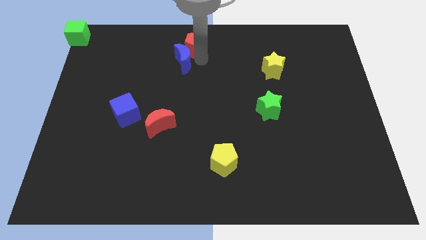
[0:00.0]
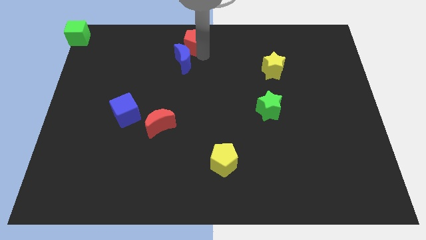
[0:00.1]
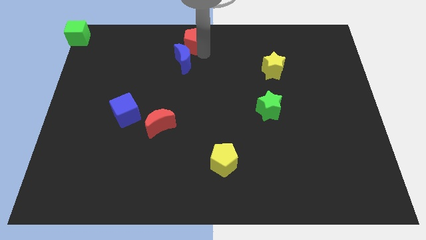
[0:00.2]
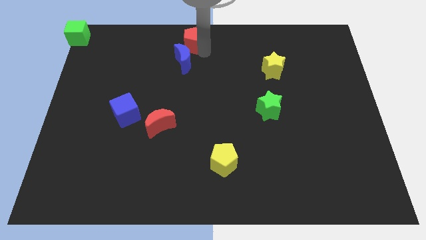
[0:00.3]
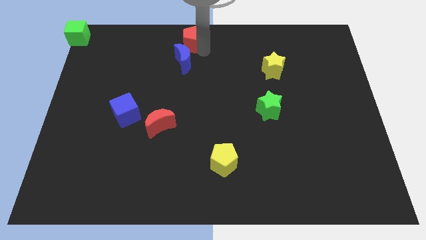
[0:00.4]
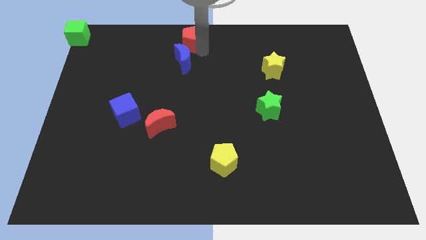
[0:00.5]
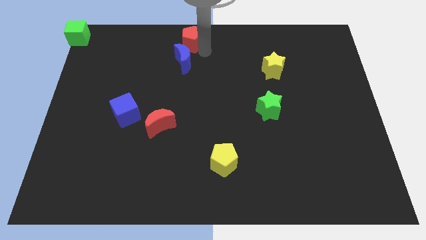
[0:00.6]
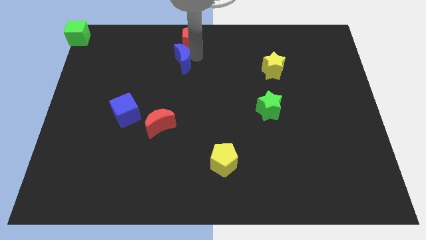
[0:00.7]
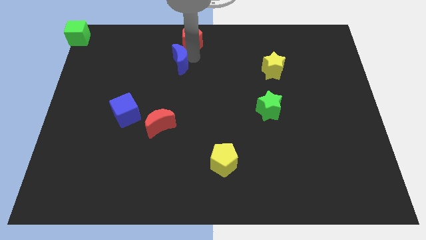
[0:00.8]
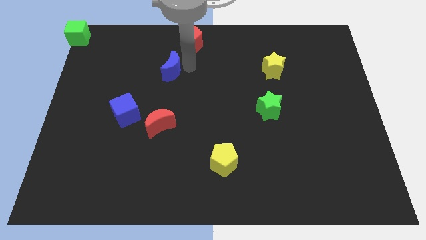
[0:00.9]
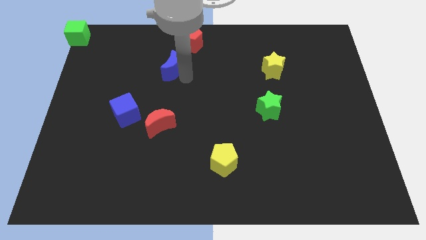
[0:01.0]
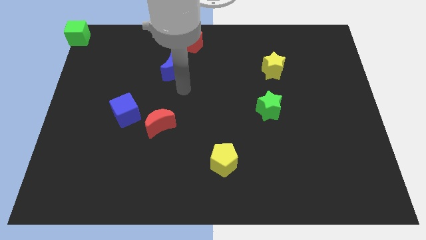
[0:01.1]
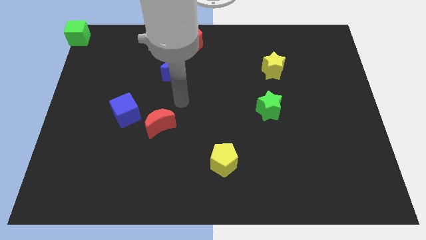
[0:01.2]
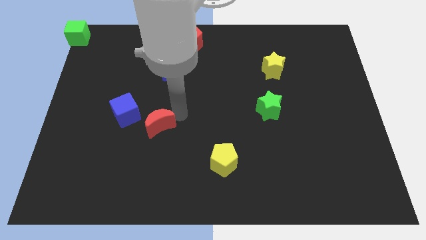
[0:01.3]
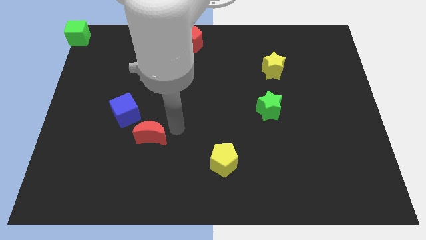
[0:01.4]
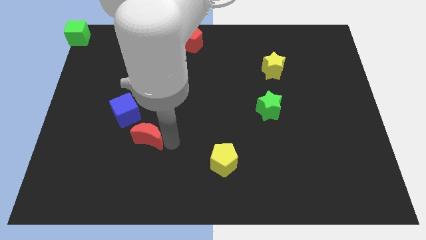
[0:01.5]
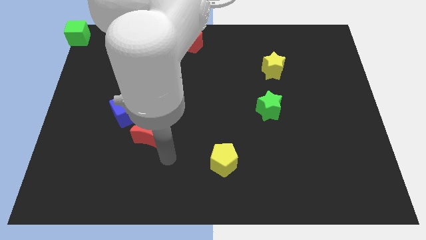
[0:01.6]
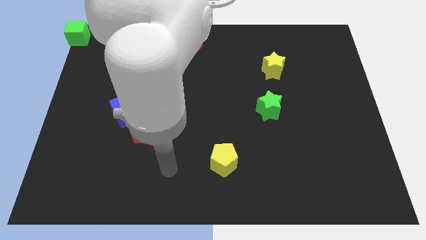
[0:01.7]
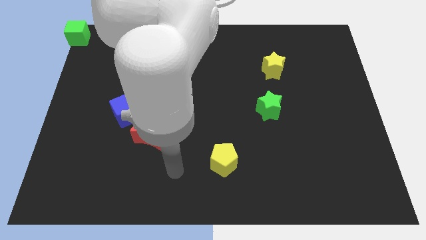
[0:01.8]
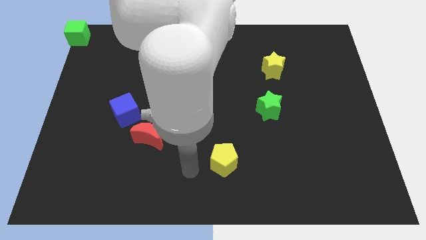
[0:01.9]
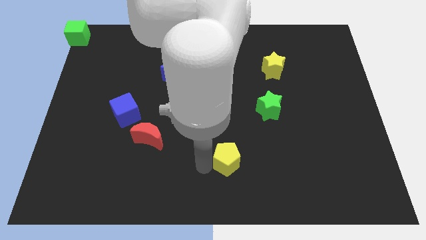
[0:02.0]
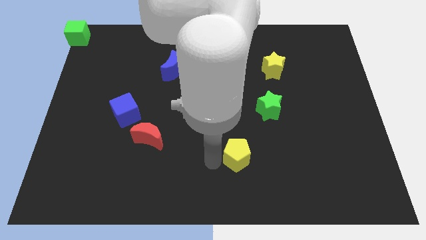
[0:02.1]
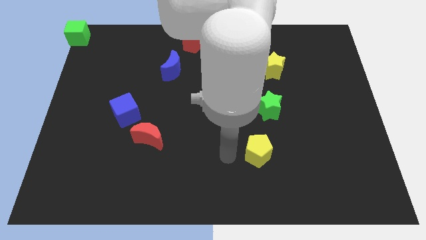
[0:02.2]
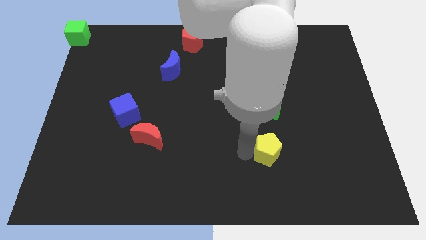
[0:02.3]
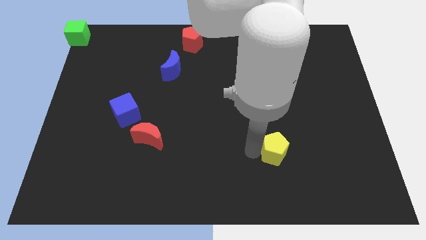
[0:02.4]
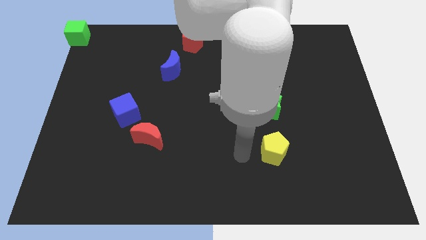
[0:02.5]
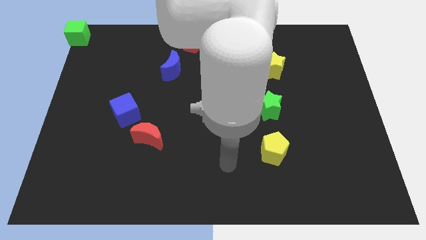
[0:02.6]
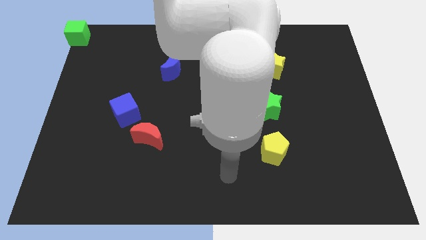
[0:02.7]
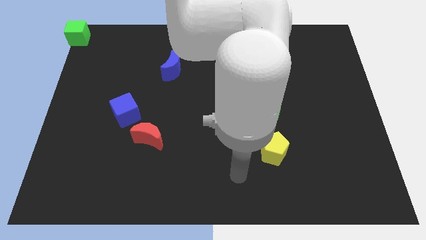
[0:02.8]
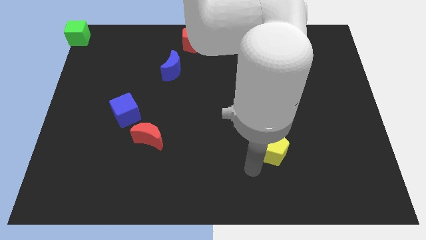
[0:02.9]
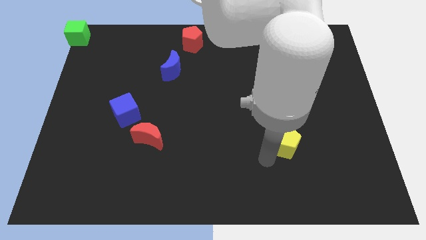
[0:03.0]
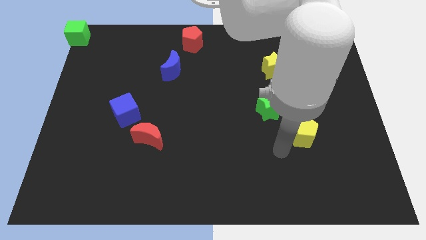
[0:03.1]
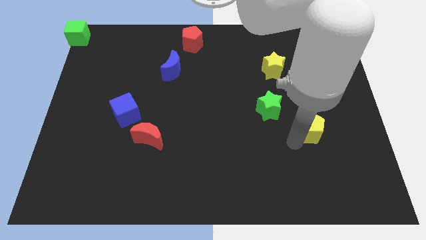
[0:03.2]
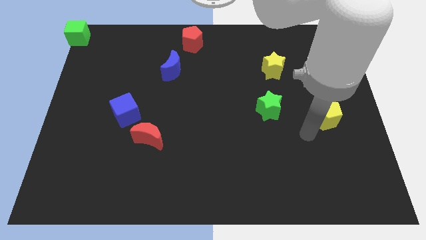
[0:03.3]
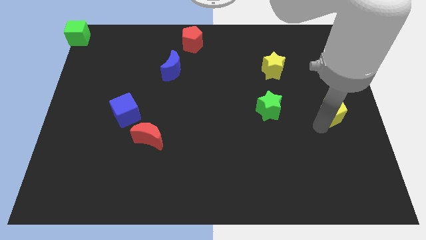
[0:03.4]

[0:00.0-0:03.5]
push yellow pentagon to the right of green star

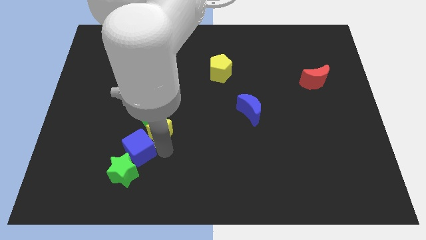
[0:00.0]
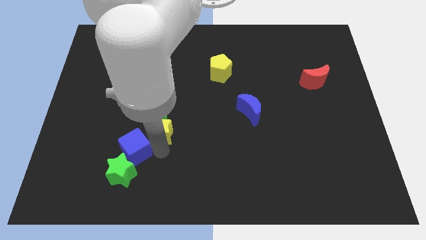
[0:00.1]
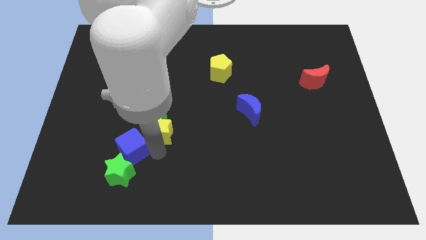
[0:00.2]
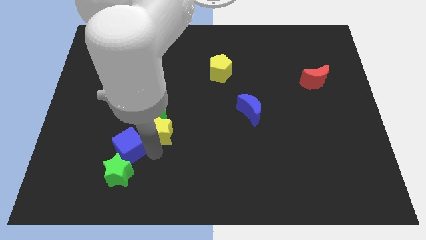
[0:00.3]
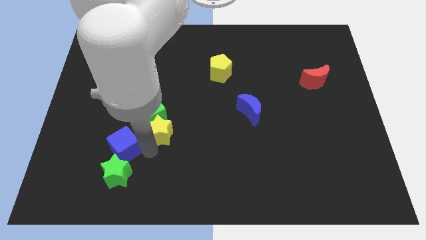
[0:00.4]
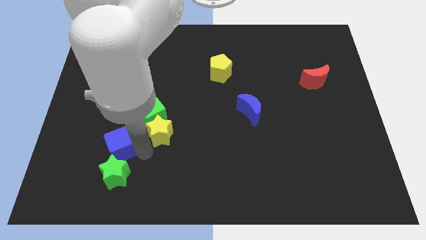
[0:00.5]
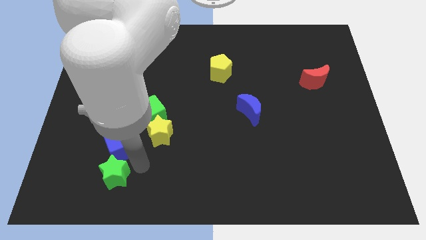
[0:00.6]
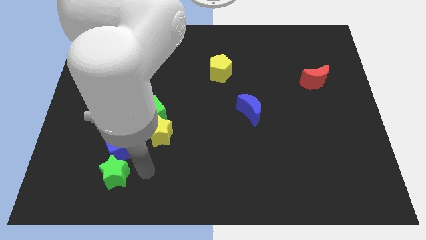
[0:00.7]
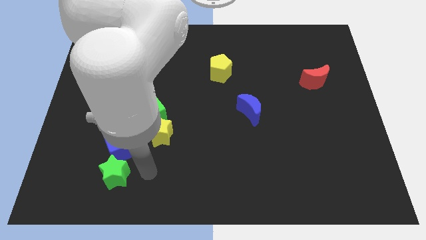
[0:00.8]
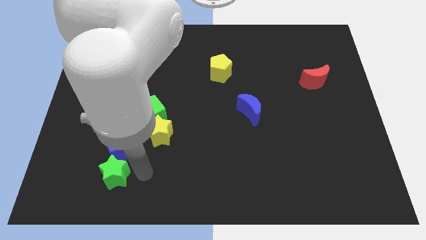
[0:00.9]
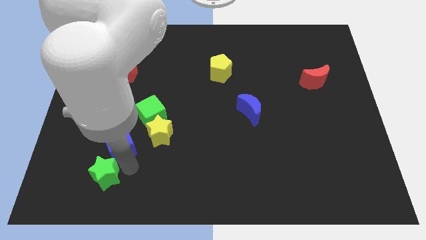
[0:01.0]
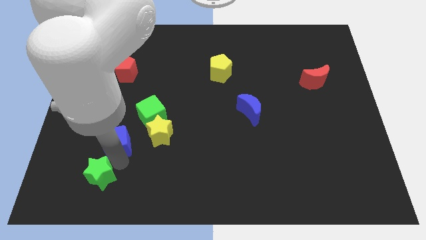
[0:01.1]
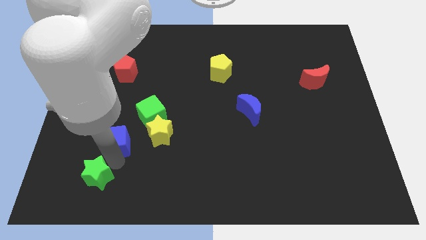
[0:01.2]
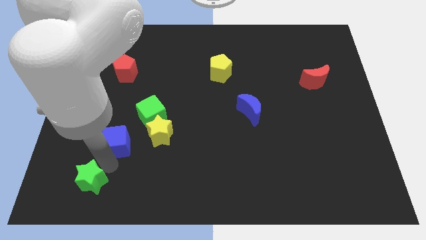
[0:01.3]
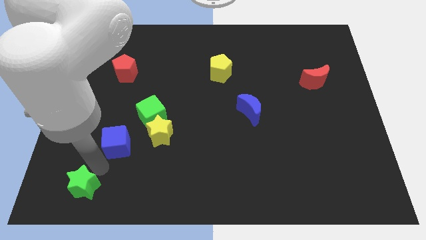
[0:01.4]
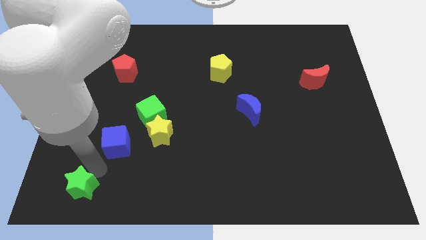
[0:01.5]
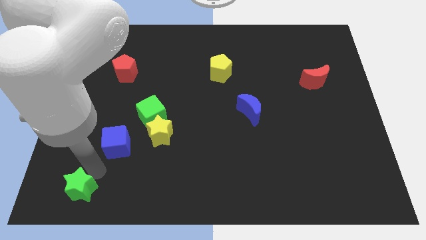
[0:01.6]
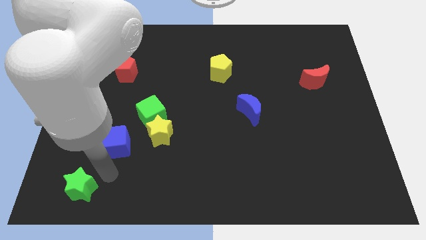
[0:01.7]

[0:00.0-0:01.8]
separate blue cube from yellow star

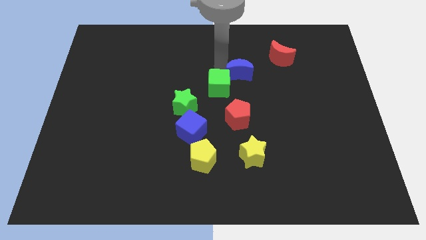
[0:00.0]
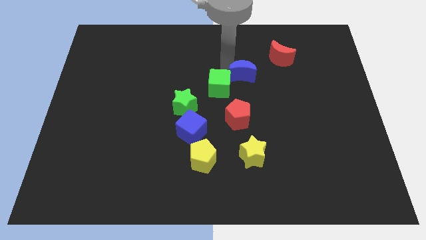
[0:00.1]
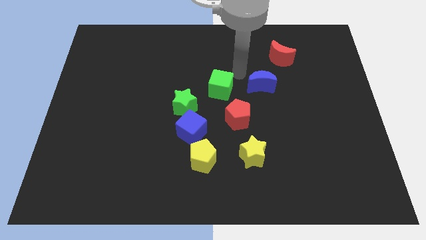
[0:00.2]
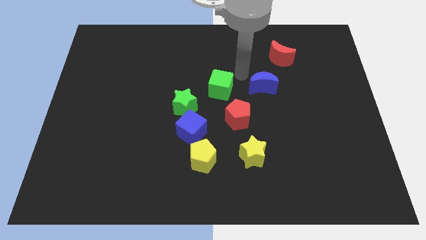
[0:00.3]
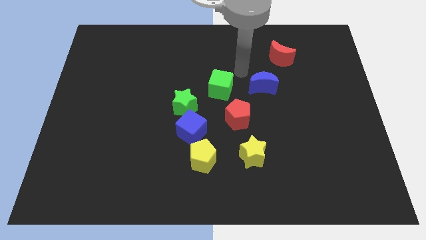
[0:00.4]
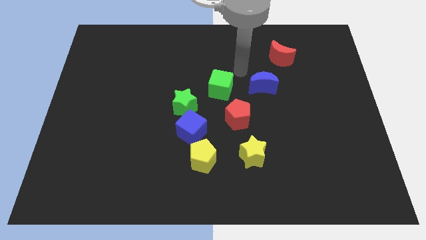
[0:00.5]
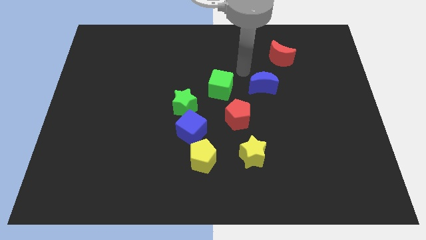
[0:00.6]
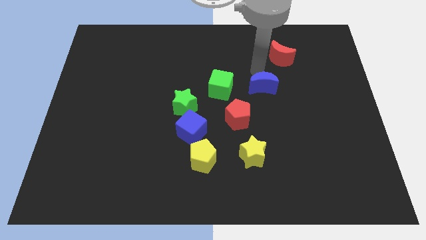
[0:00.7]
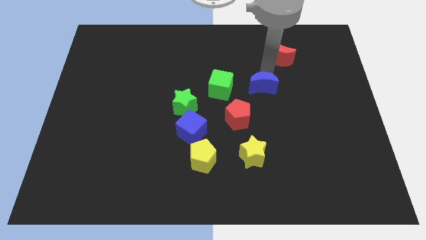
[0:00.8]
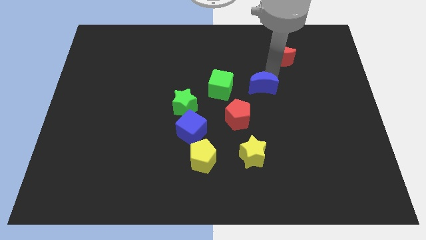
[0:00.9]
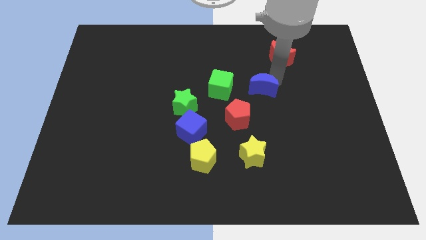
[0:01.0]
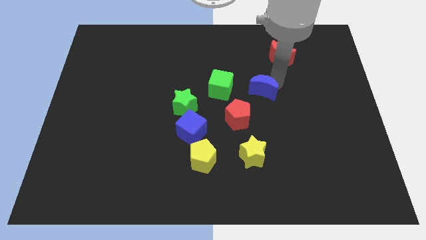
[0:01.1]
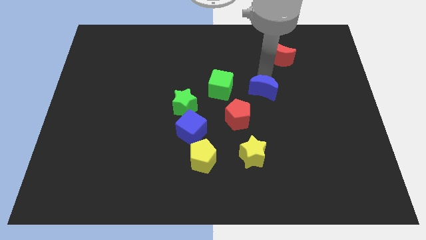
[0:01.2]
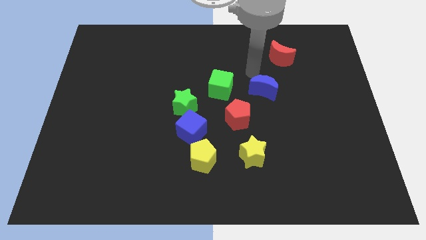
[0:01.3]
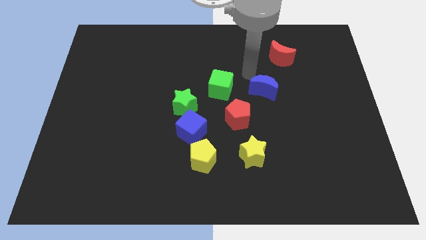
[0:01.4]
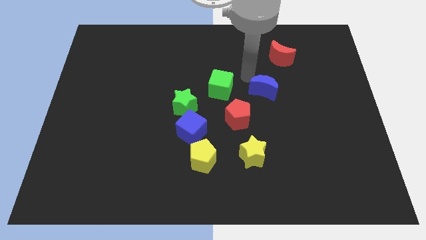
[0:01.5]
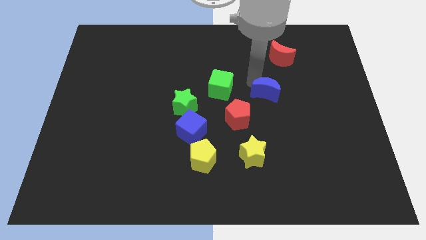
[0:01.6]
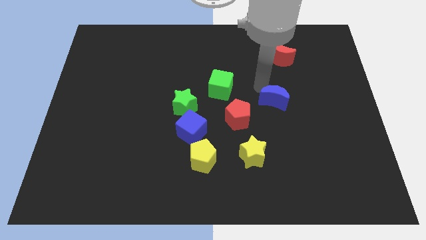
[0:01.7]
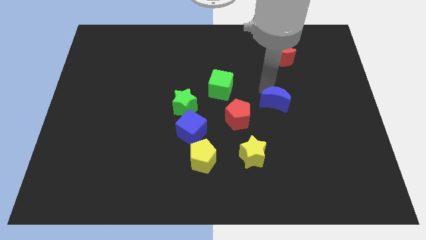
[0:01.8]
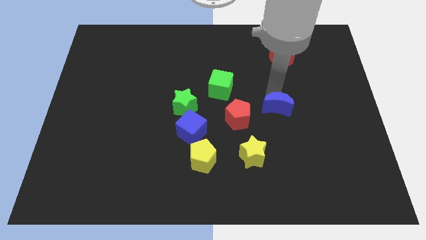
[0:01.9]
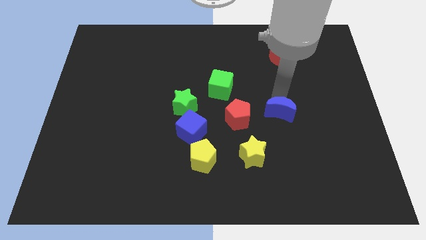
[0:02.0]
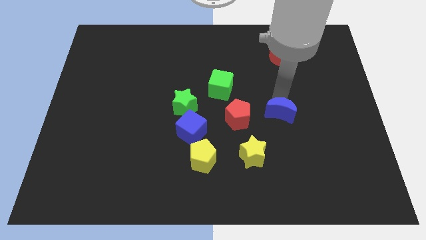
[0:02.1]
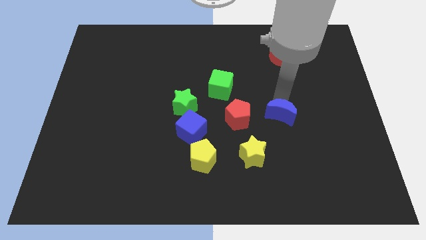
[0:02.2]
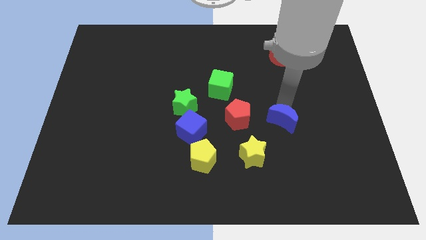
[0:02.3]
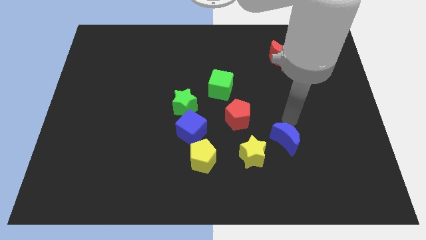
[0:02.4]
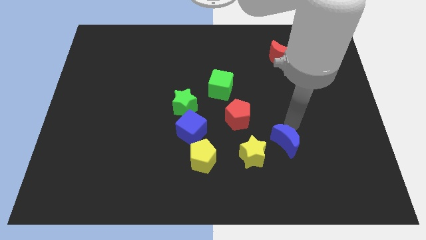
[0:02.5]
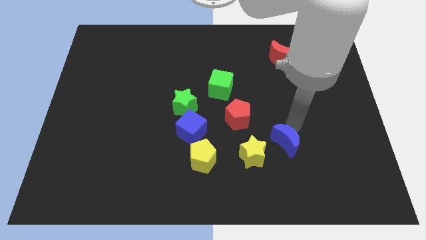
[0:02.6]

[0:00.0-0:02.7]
separate blue moon from green cube

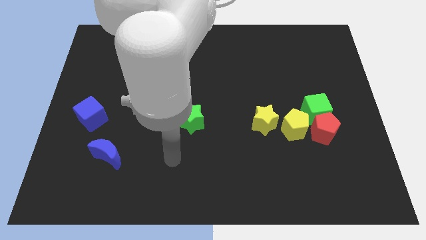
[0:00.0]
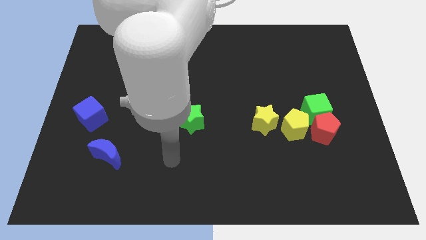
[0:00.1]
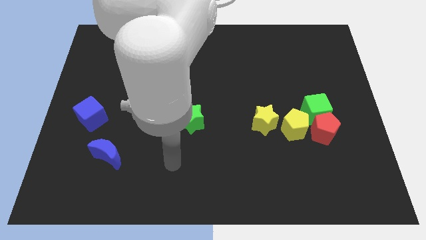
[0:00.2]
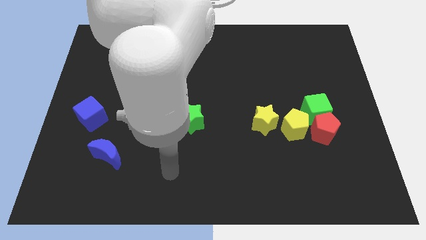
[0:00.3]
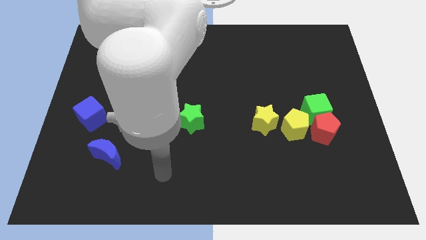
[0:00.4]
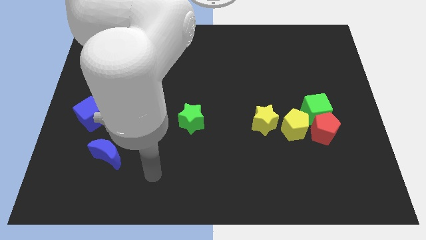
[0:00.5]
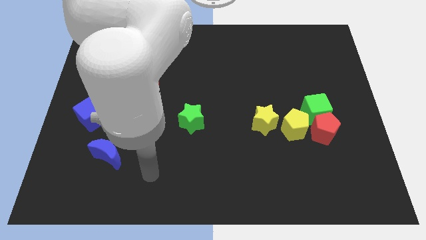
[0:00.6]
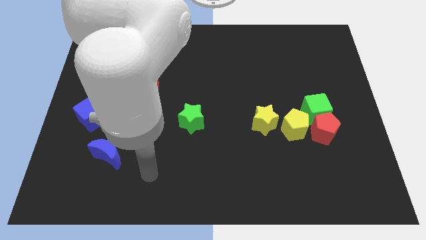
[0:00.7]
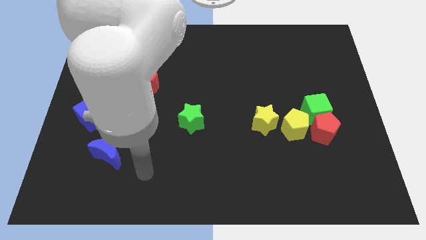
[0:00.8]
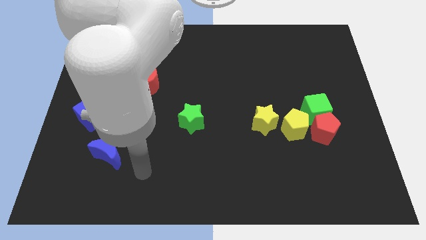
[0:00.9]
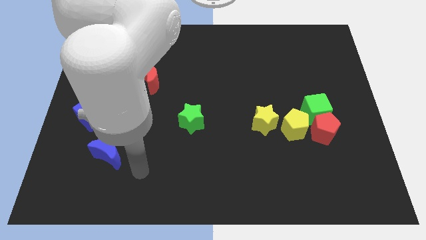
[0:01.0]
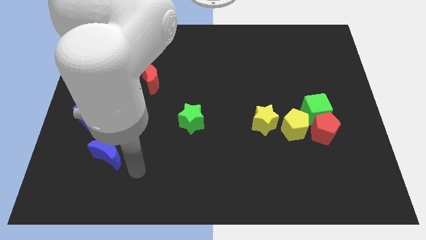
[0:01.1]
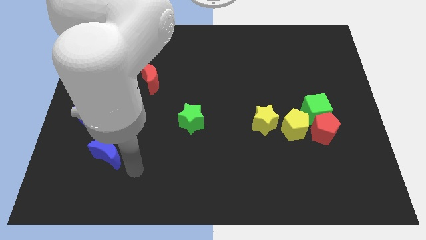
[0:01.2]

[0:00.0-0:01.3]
point your arm at the right of the blue crescent
